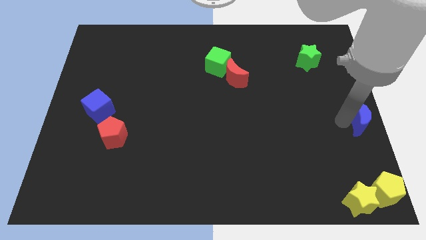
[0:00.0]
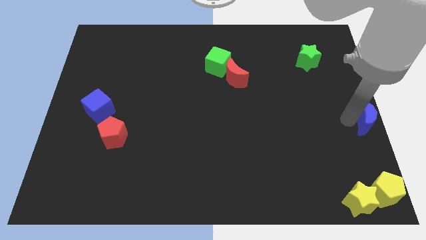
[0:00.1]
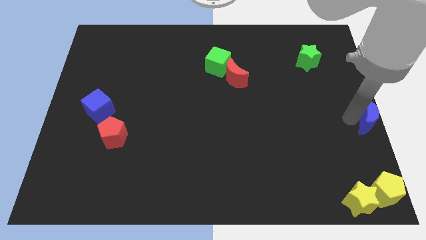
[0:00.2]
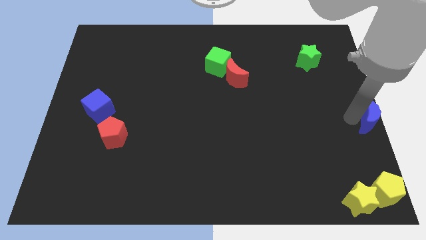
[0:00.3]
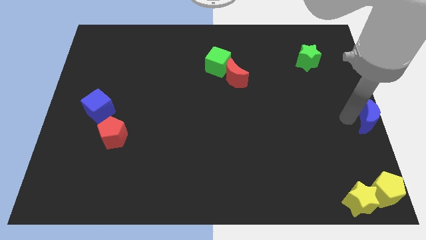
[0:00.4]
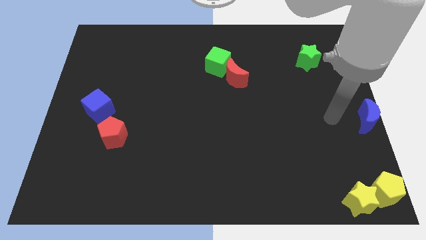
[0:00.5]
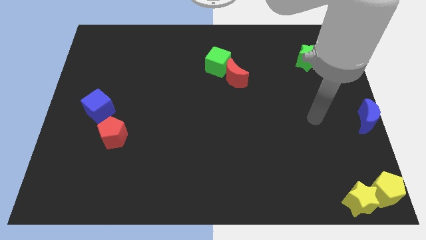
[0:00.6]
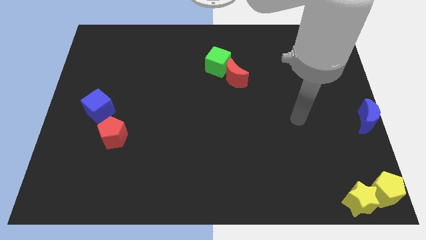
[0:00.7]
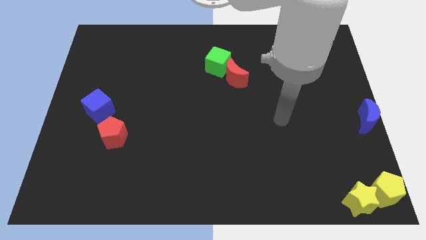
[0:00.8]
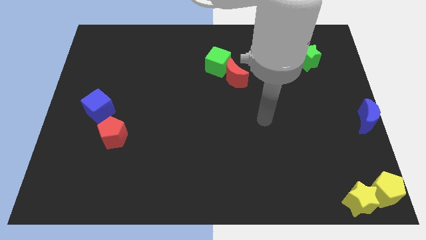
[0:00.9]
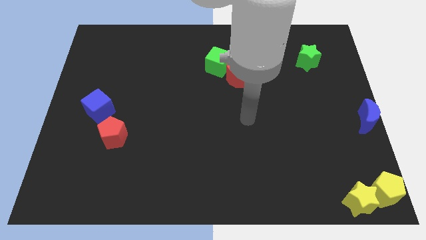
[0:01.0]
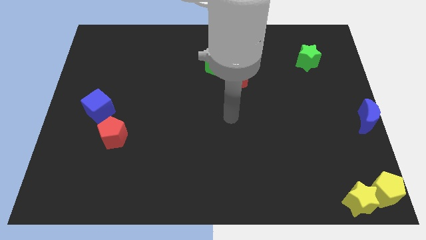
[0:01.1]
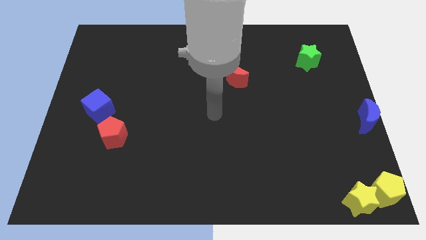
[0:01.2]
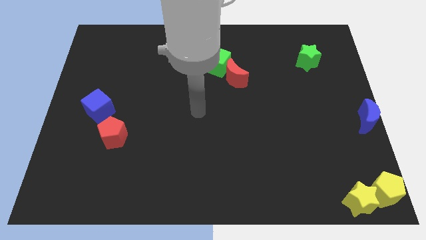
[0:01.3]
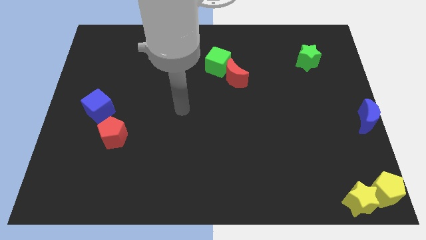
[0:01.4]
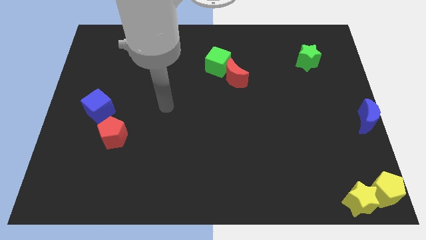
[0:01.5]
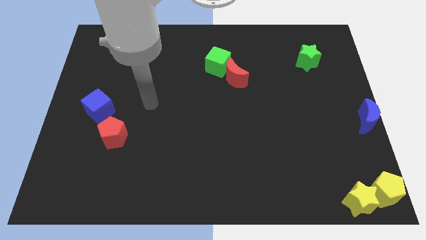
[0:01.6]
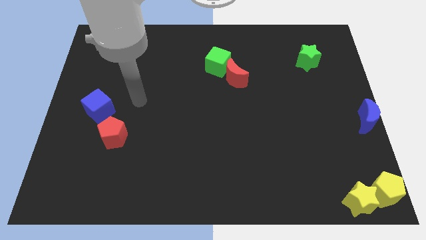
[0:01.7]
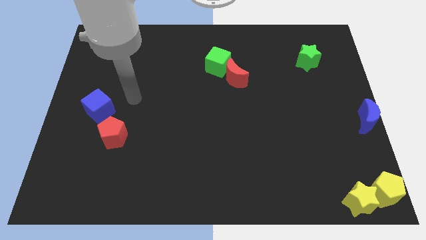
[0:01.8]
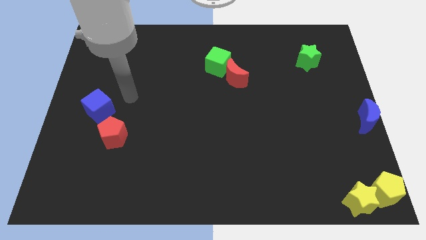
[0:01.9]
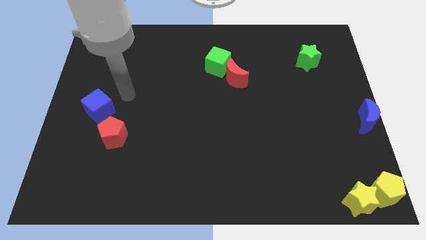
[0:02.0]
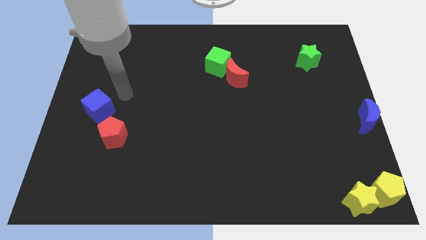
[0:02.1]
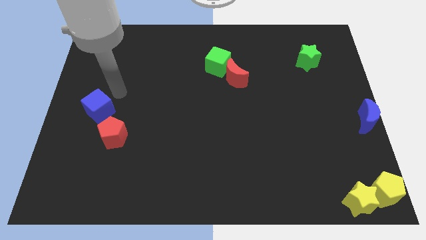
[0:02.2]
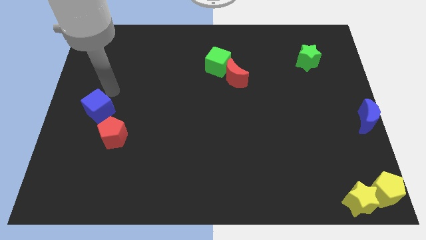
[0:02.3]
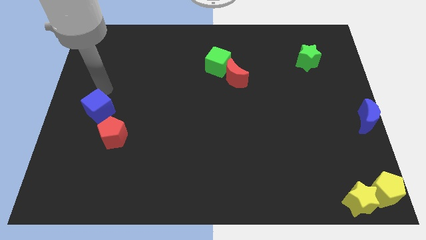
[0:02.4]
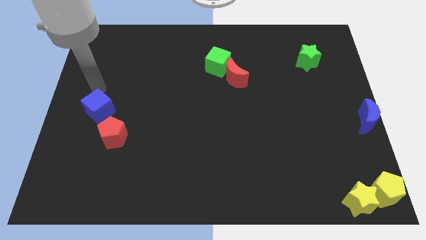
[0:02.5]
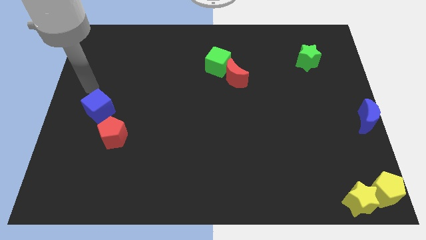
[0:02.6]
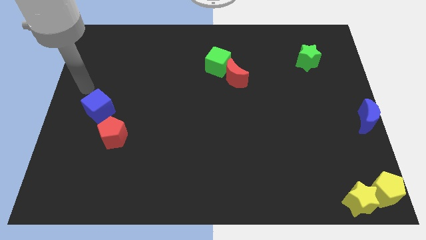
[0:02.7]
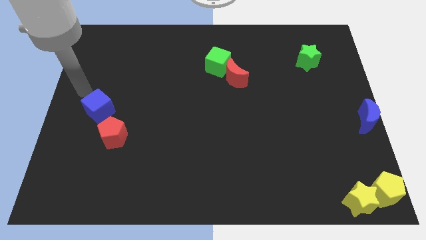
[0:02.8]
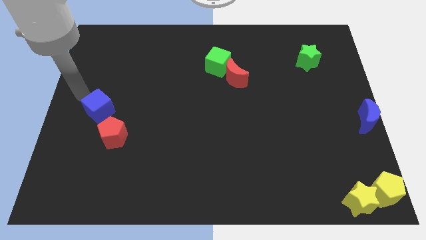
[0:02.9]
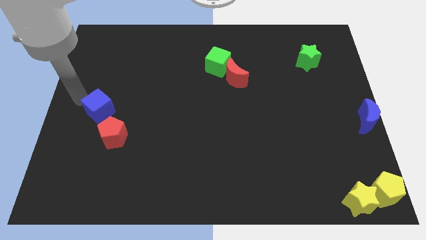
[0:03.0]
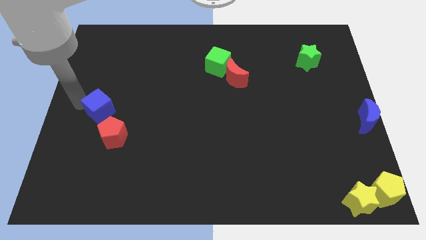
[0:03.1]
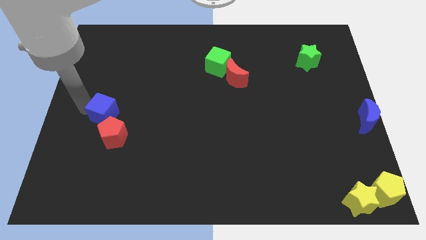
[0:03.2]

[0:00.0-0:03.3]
move your arm towards the blue cube

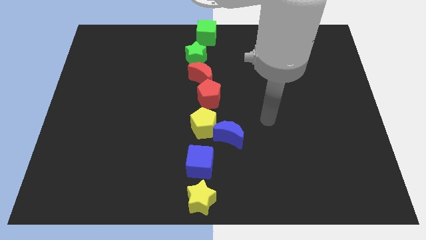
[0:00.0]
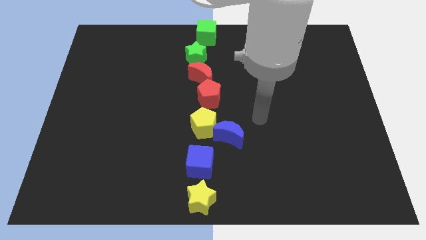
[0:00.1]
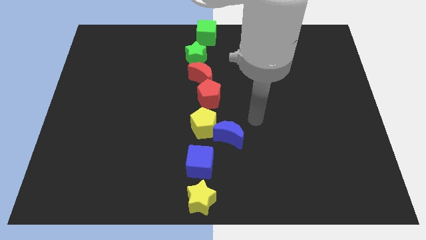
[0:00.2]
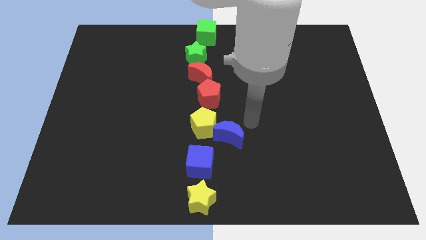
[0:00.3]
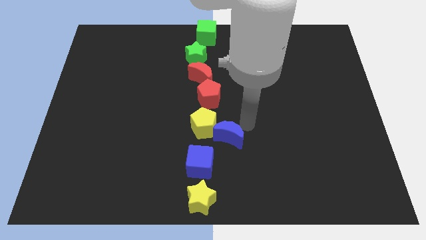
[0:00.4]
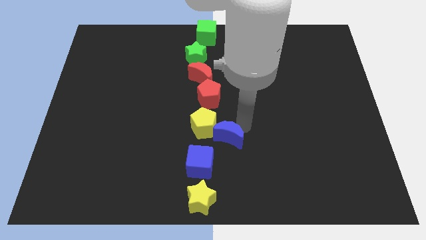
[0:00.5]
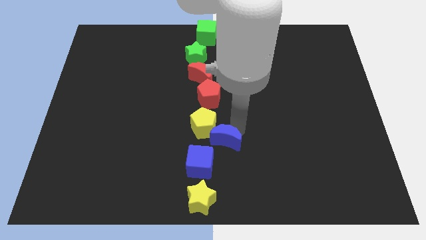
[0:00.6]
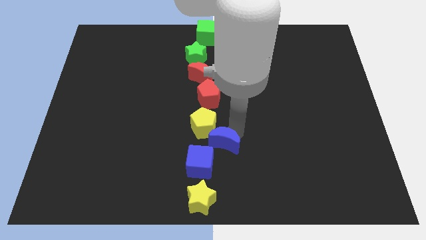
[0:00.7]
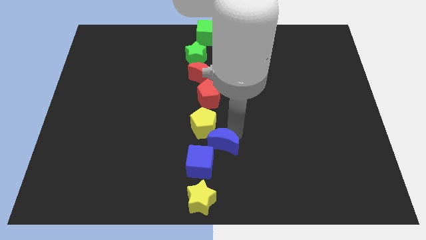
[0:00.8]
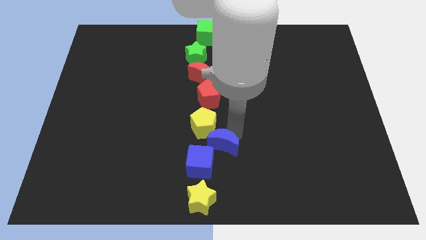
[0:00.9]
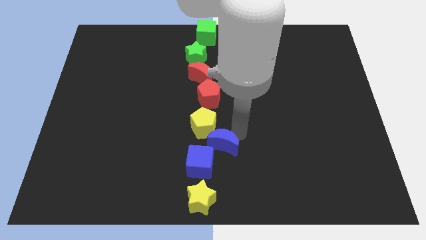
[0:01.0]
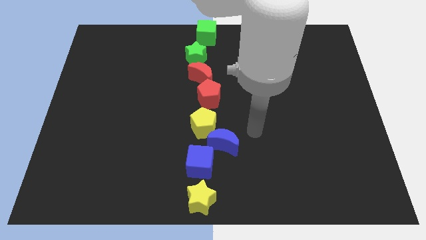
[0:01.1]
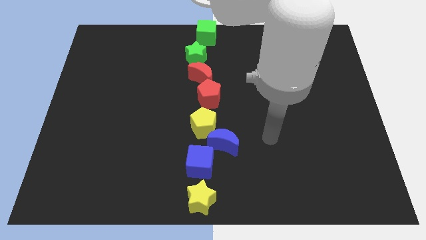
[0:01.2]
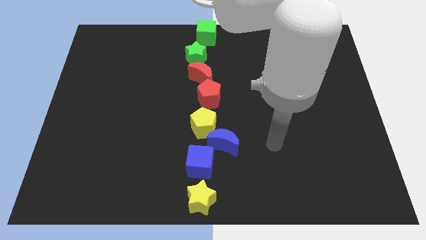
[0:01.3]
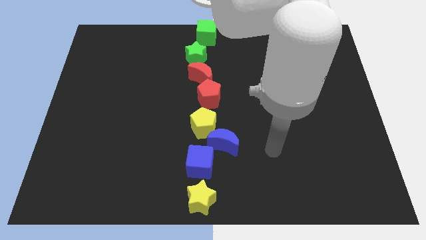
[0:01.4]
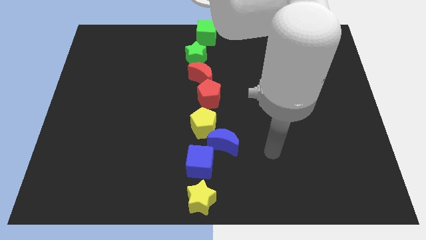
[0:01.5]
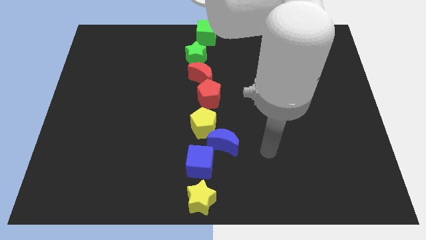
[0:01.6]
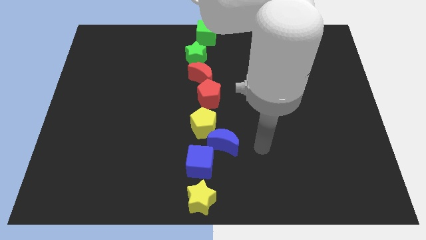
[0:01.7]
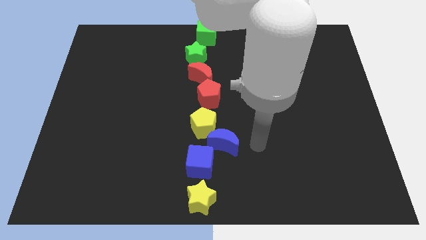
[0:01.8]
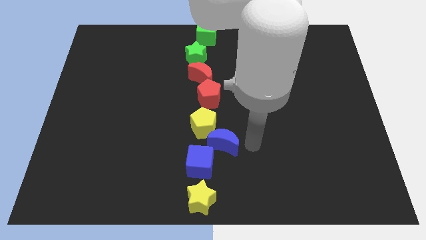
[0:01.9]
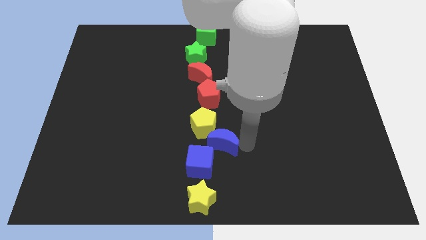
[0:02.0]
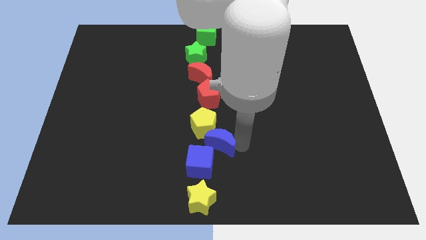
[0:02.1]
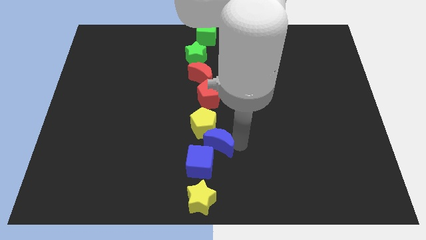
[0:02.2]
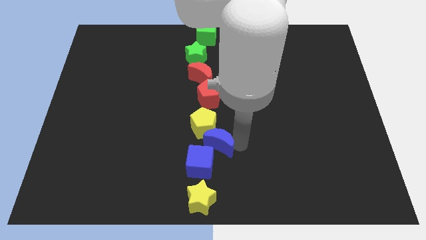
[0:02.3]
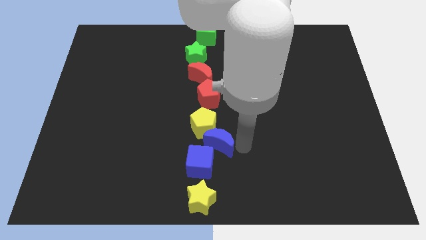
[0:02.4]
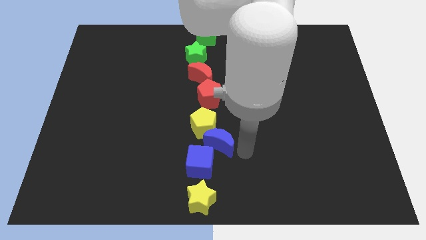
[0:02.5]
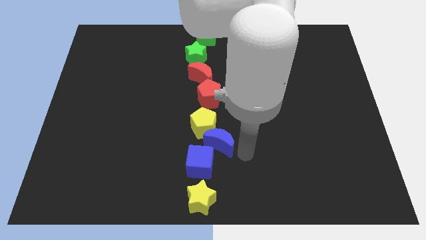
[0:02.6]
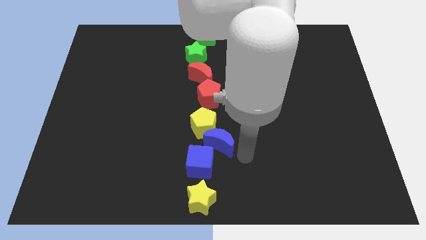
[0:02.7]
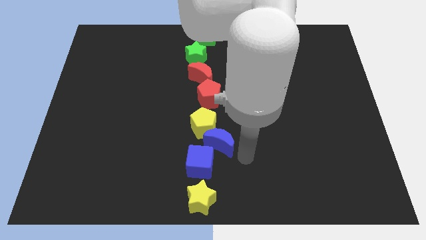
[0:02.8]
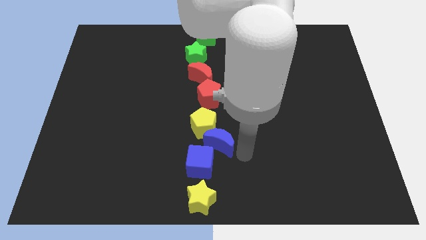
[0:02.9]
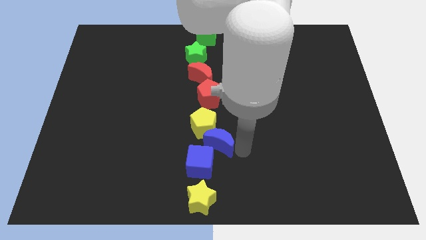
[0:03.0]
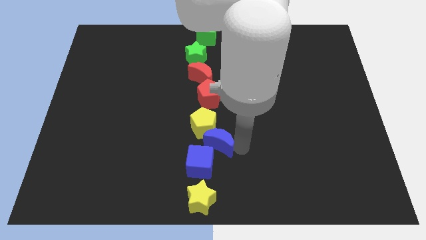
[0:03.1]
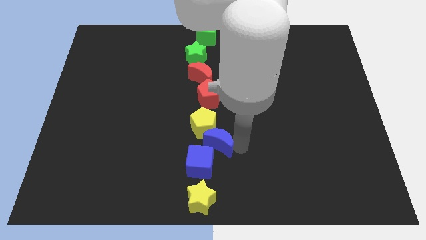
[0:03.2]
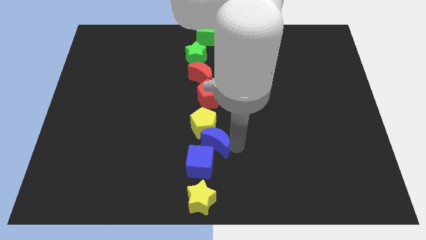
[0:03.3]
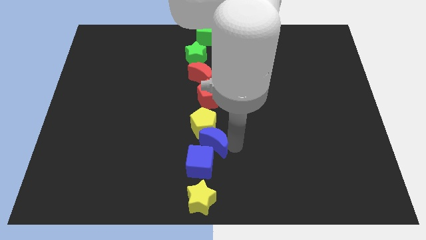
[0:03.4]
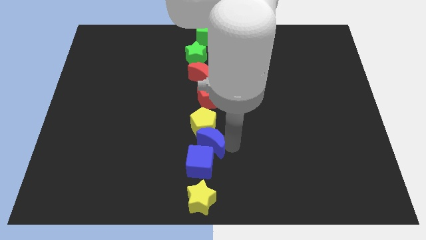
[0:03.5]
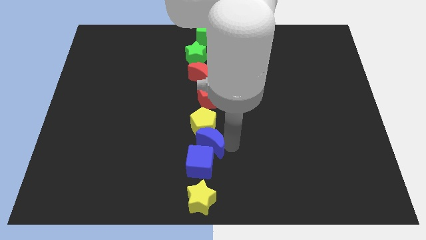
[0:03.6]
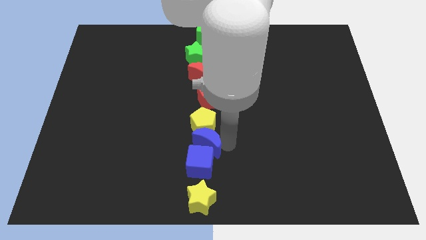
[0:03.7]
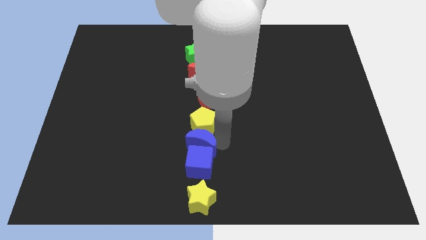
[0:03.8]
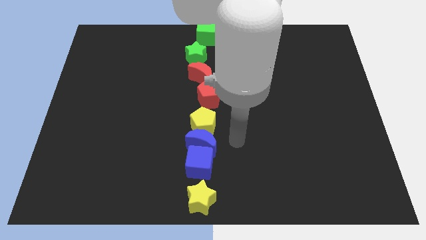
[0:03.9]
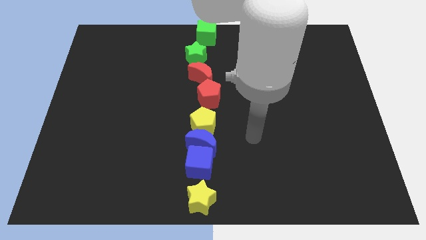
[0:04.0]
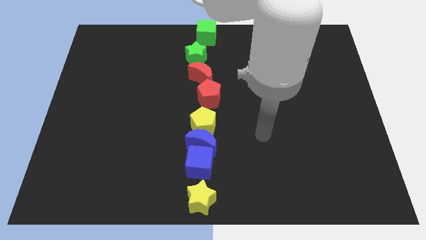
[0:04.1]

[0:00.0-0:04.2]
put the blue moon below the yellow pentagon

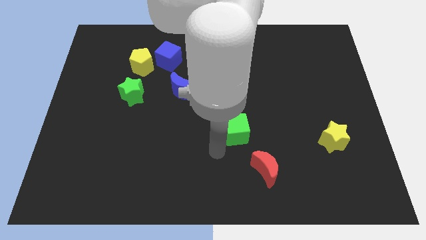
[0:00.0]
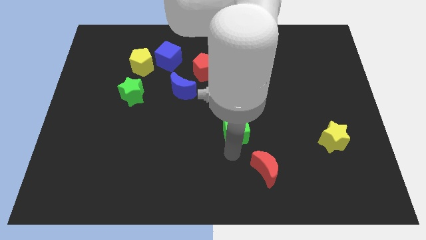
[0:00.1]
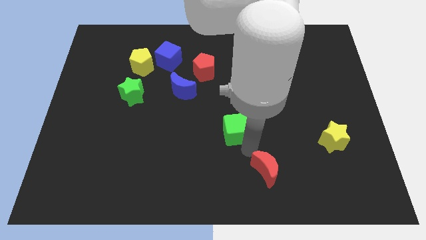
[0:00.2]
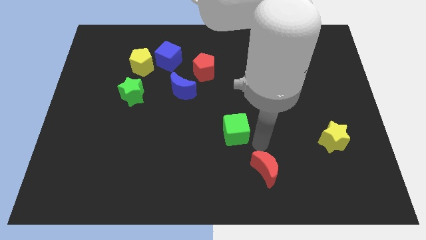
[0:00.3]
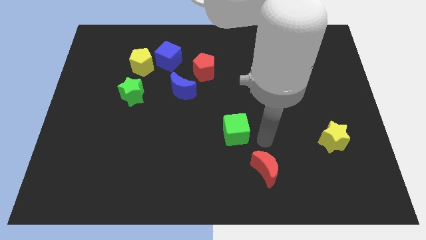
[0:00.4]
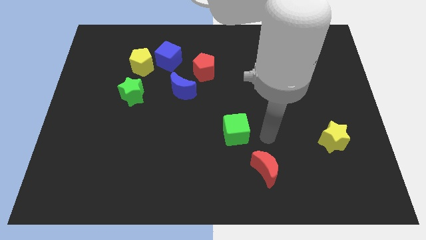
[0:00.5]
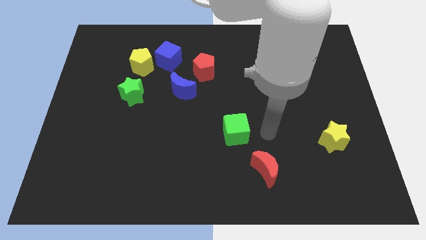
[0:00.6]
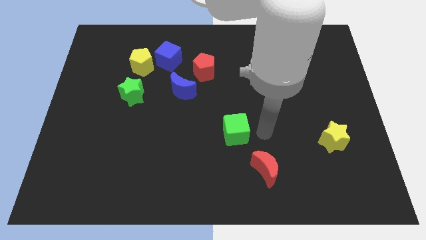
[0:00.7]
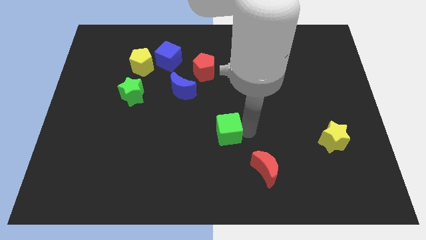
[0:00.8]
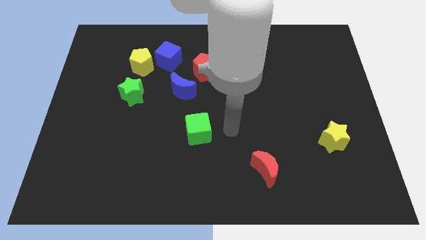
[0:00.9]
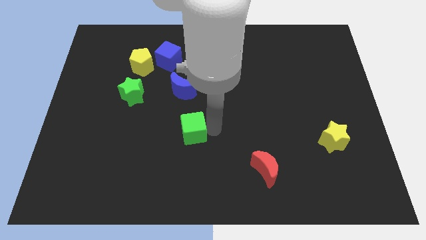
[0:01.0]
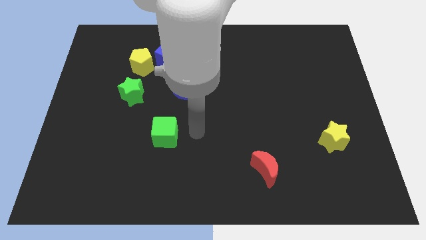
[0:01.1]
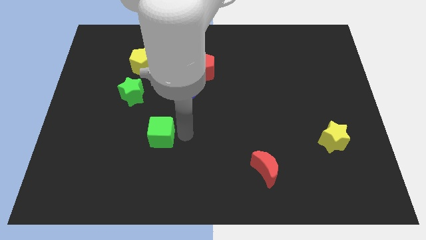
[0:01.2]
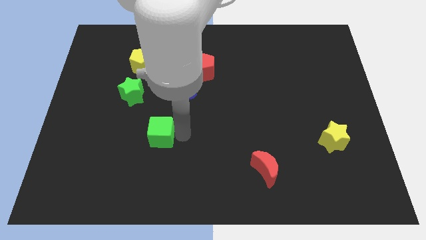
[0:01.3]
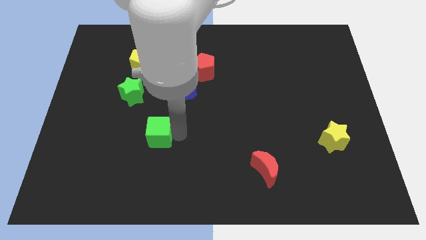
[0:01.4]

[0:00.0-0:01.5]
move green cube towards the green star
